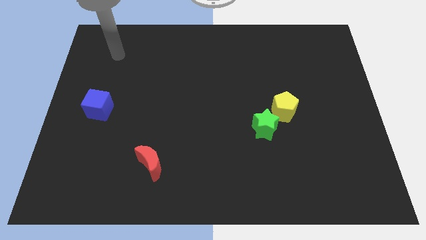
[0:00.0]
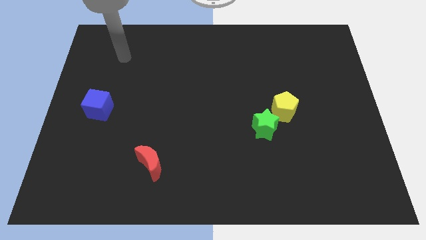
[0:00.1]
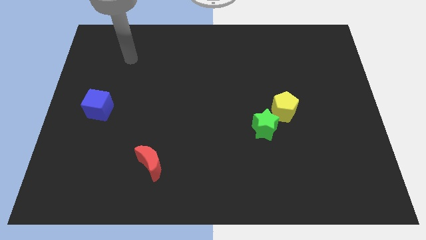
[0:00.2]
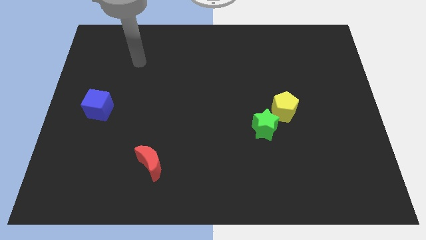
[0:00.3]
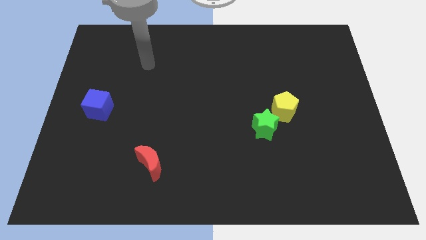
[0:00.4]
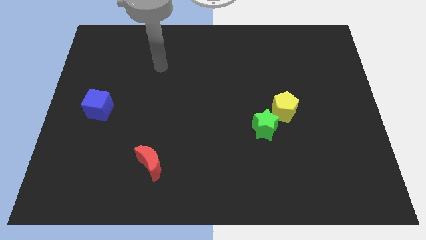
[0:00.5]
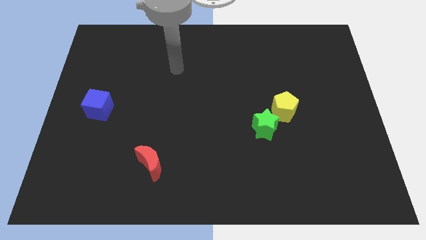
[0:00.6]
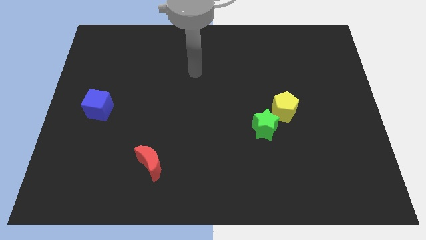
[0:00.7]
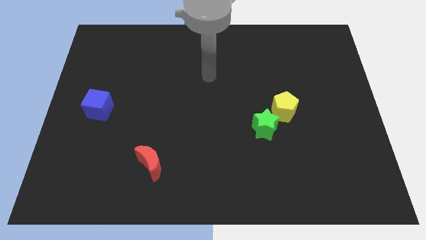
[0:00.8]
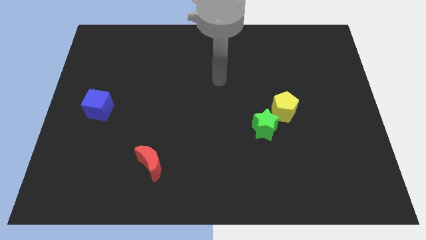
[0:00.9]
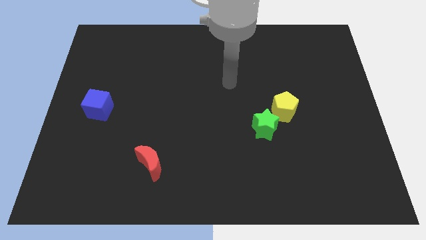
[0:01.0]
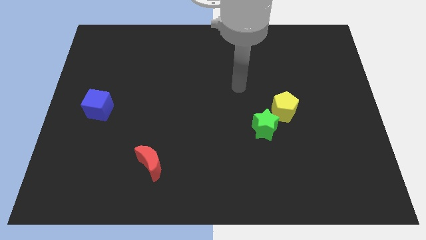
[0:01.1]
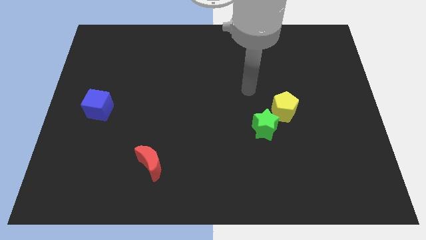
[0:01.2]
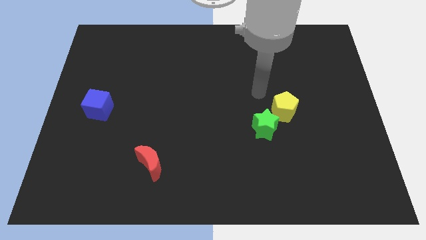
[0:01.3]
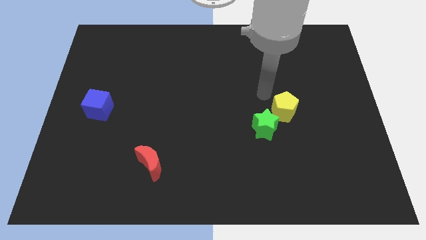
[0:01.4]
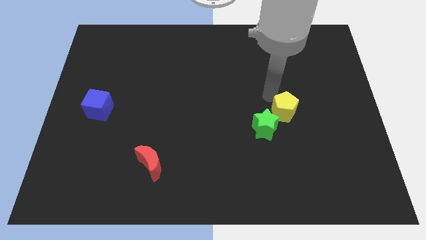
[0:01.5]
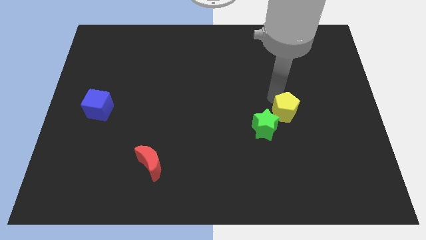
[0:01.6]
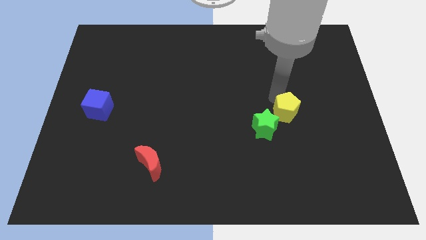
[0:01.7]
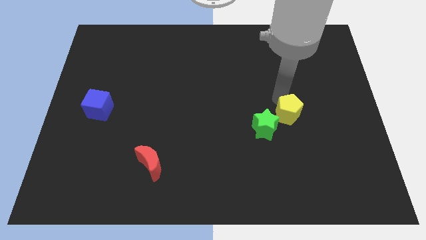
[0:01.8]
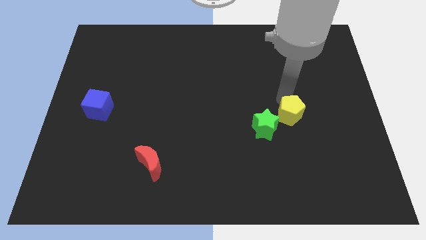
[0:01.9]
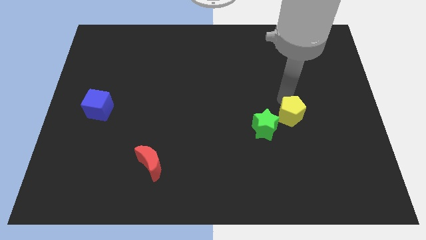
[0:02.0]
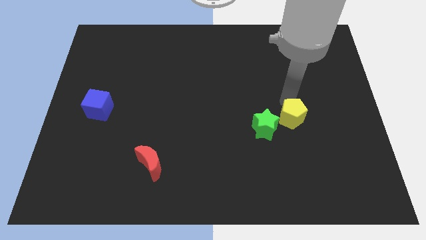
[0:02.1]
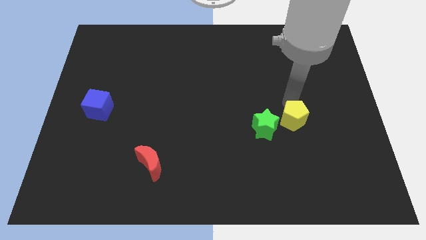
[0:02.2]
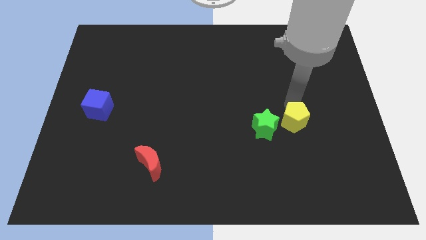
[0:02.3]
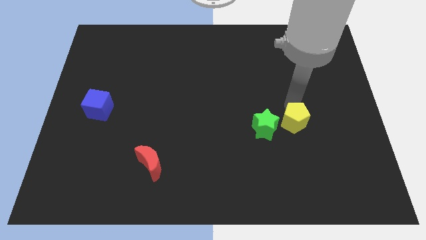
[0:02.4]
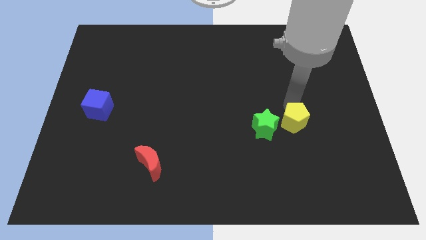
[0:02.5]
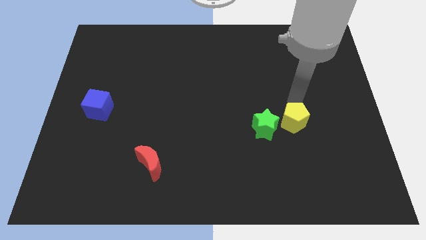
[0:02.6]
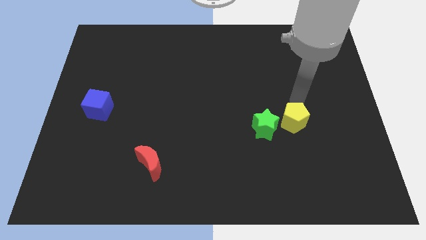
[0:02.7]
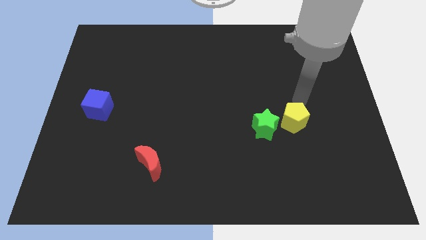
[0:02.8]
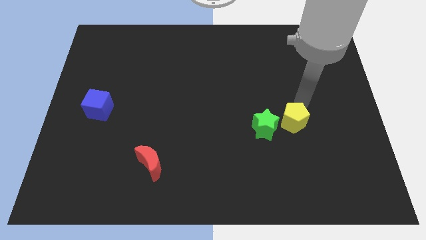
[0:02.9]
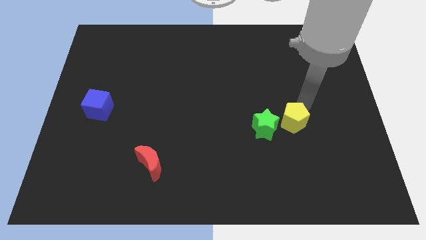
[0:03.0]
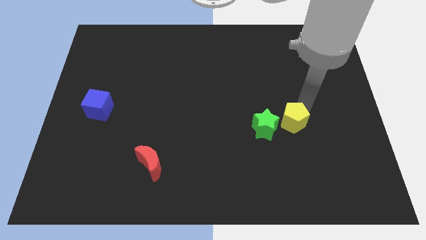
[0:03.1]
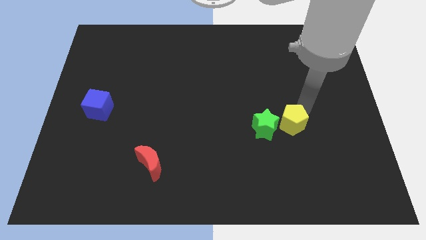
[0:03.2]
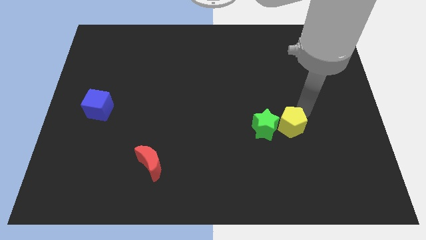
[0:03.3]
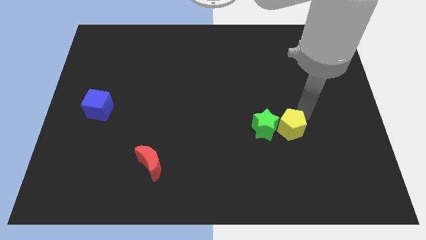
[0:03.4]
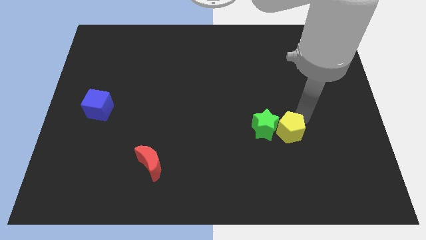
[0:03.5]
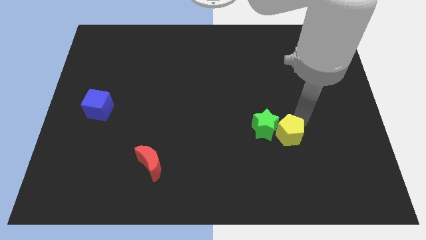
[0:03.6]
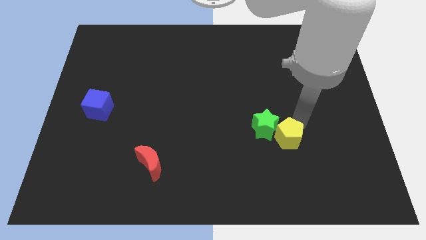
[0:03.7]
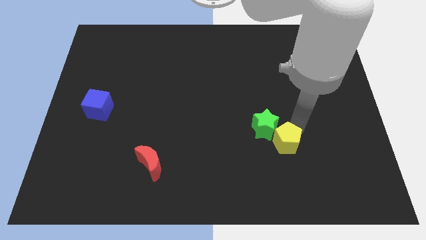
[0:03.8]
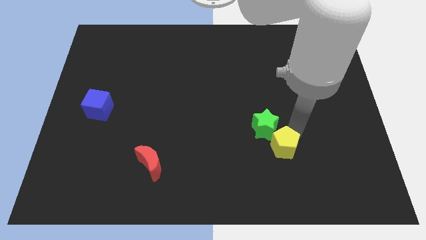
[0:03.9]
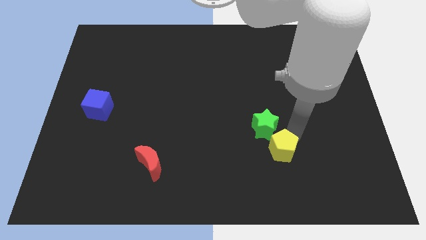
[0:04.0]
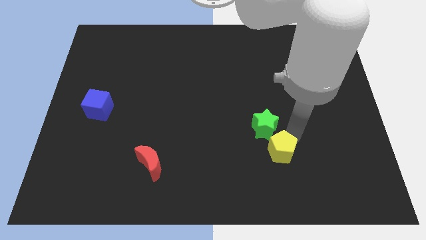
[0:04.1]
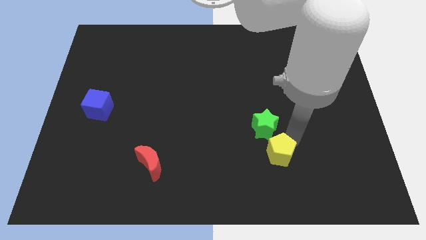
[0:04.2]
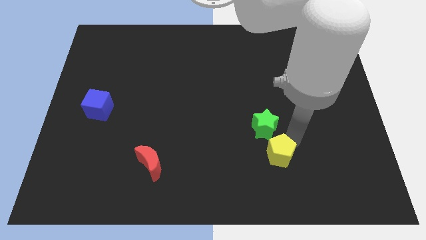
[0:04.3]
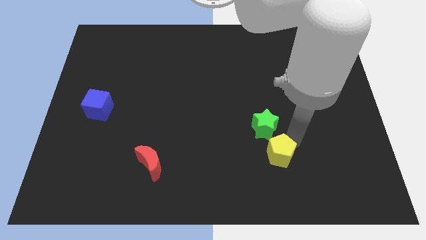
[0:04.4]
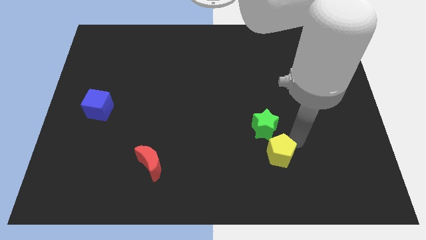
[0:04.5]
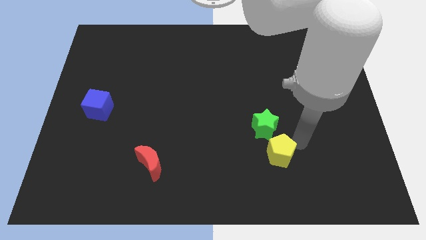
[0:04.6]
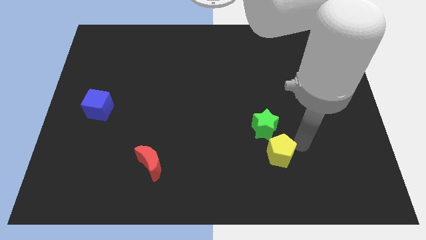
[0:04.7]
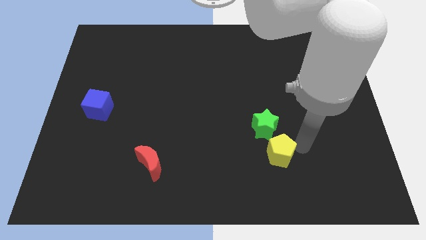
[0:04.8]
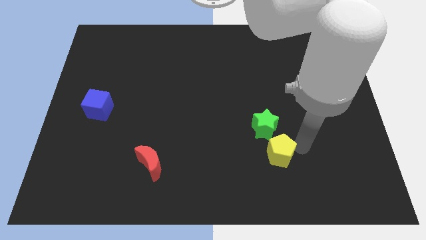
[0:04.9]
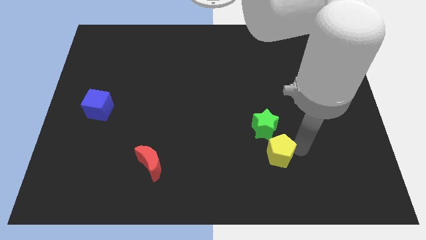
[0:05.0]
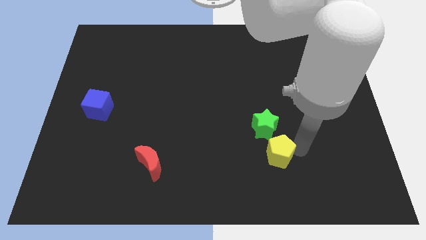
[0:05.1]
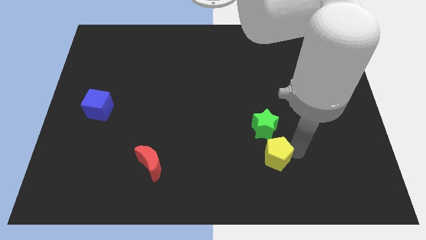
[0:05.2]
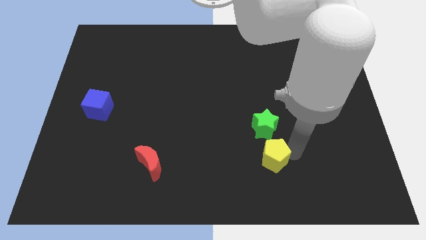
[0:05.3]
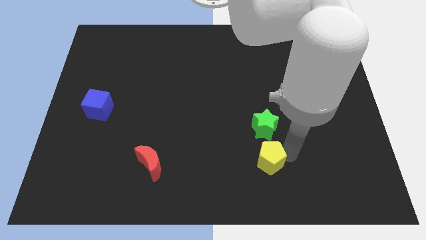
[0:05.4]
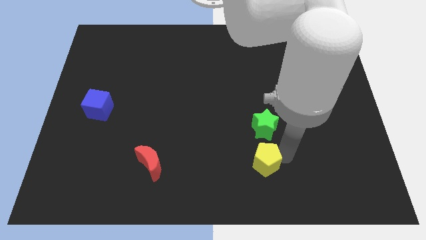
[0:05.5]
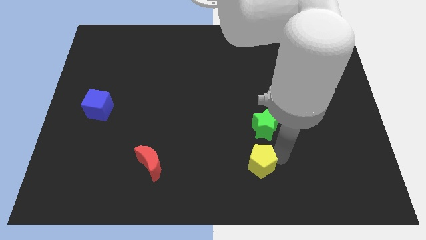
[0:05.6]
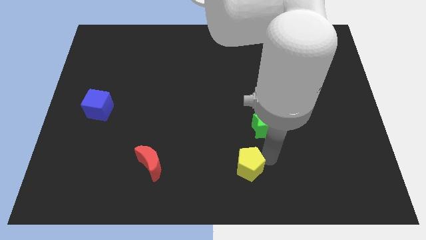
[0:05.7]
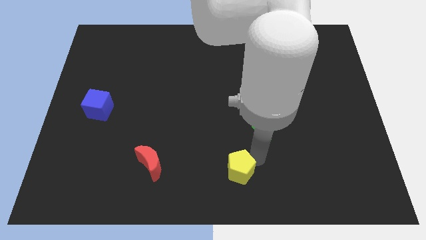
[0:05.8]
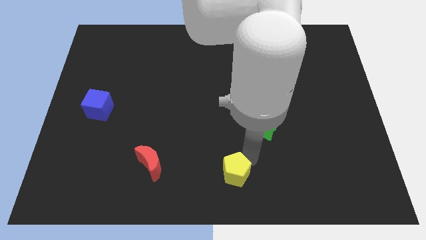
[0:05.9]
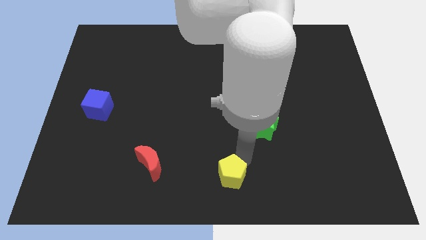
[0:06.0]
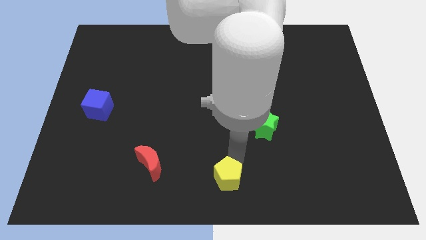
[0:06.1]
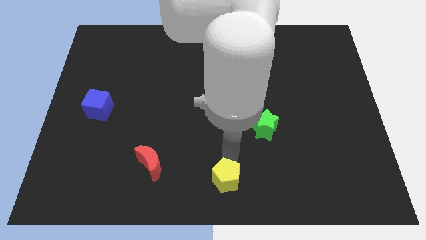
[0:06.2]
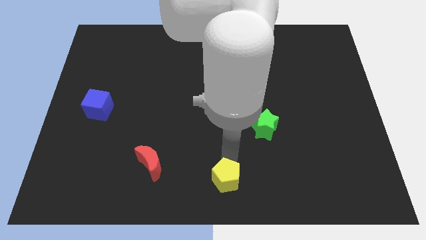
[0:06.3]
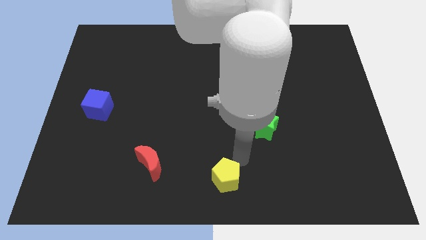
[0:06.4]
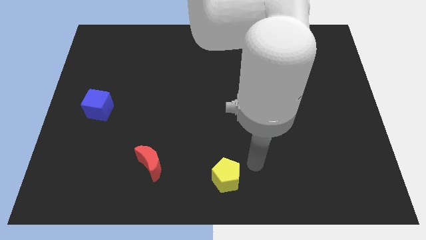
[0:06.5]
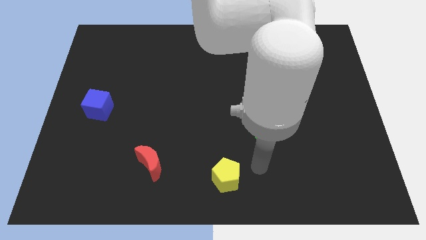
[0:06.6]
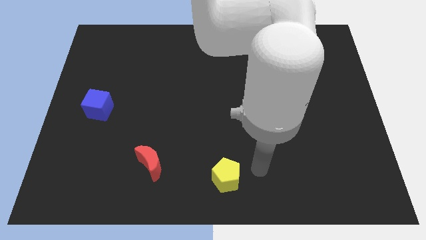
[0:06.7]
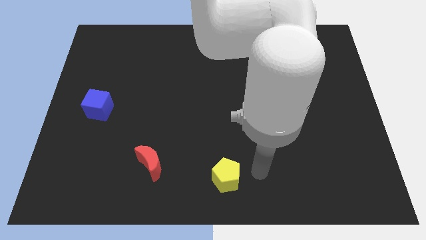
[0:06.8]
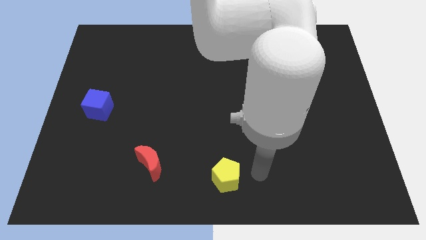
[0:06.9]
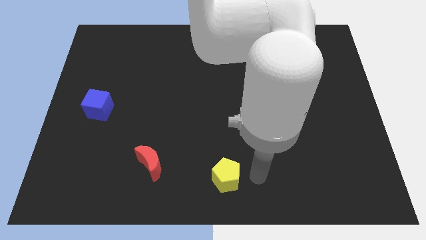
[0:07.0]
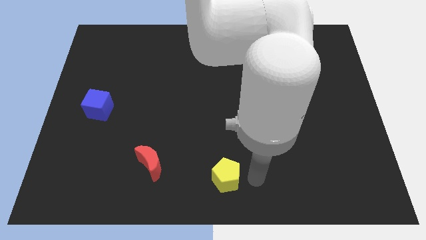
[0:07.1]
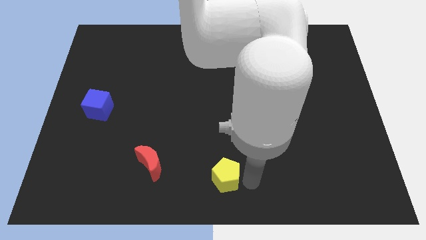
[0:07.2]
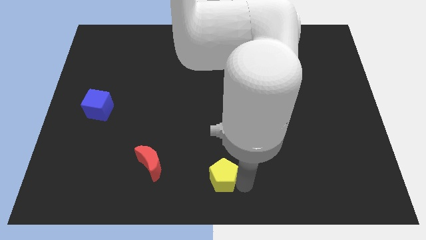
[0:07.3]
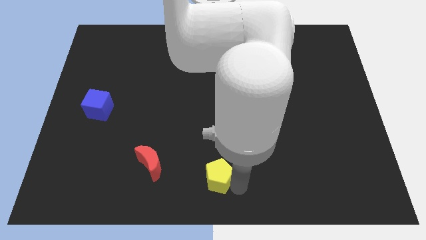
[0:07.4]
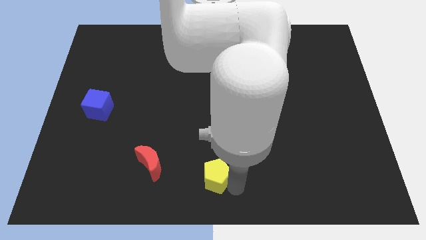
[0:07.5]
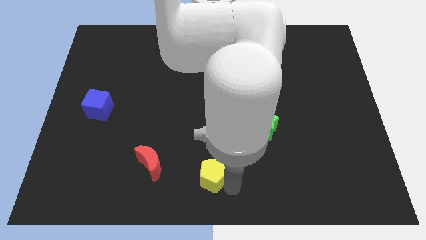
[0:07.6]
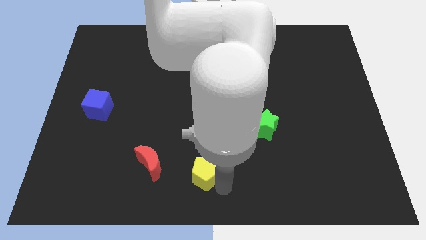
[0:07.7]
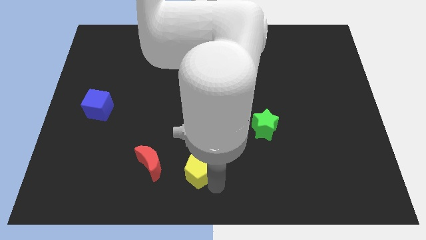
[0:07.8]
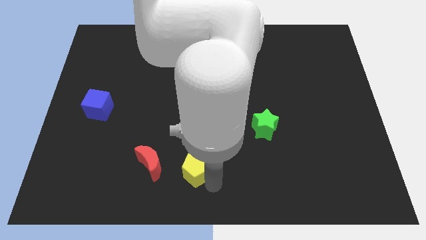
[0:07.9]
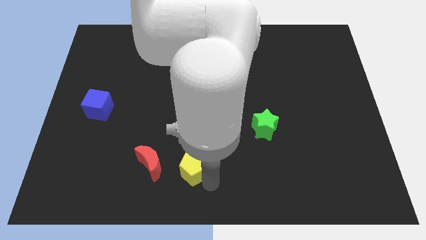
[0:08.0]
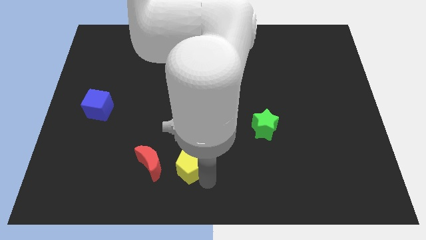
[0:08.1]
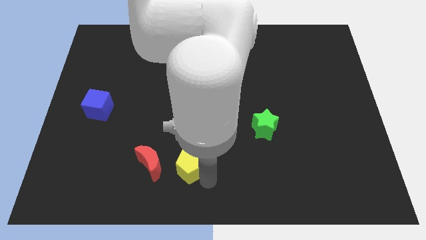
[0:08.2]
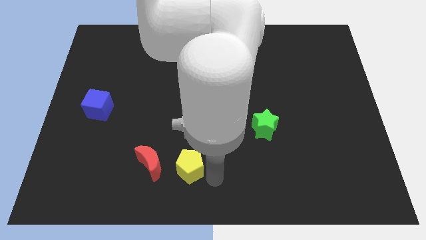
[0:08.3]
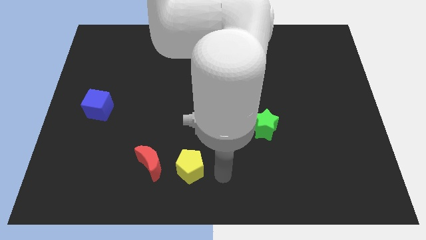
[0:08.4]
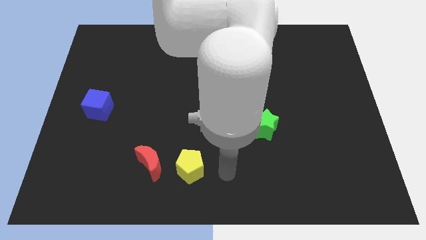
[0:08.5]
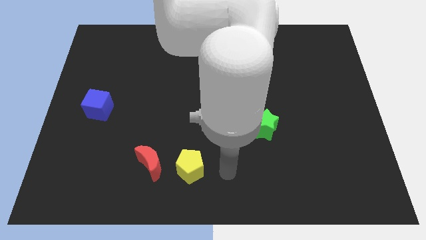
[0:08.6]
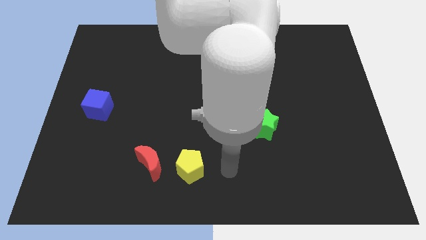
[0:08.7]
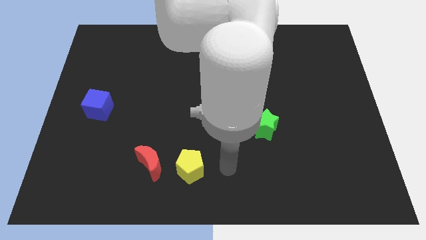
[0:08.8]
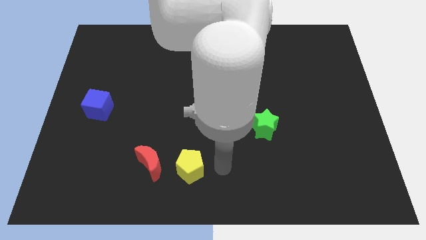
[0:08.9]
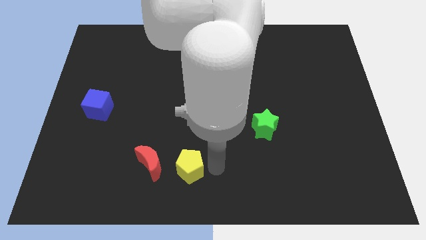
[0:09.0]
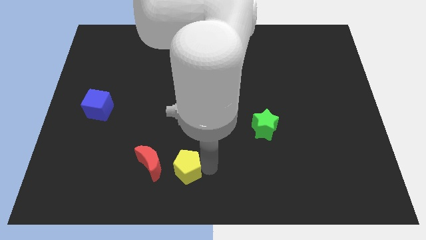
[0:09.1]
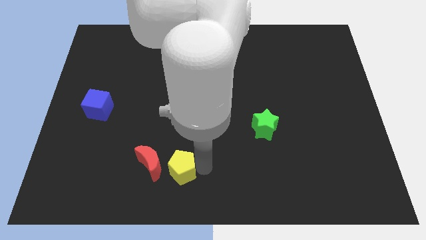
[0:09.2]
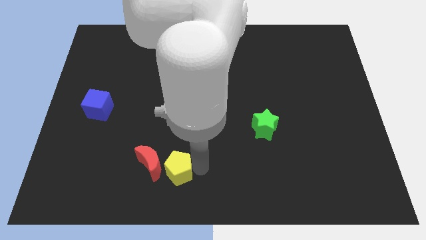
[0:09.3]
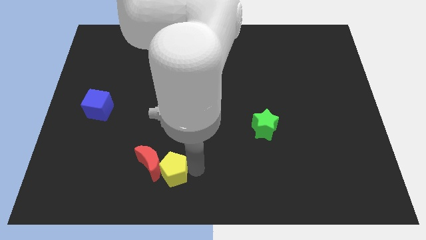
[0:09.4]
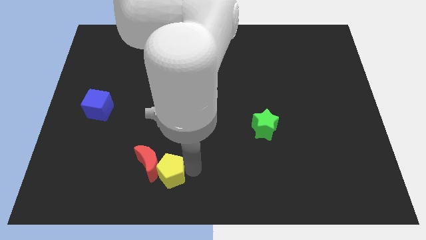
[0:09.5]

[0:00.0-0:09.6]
push the pentagon to the moon
